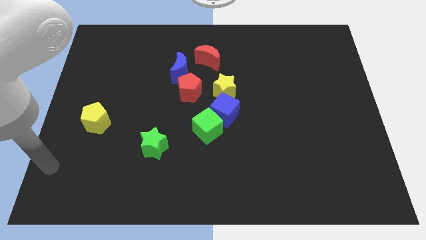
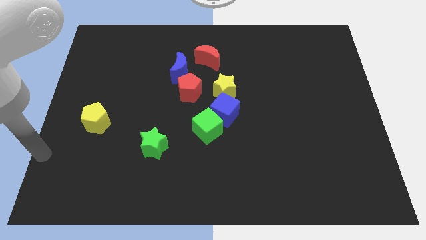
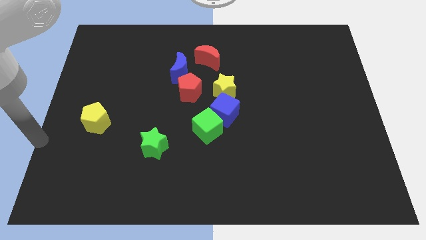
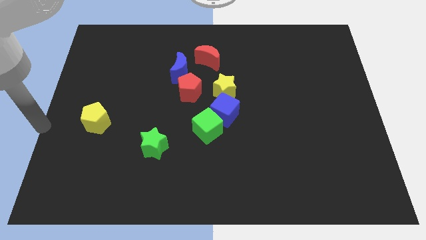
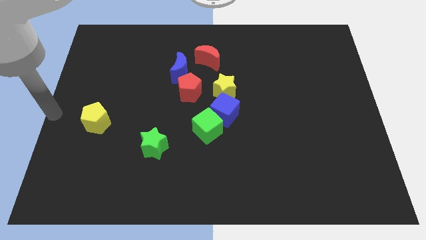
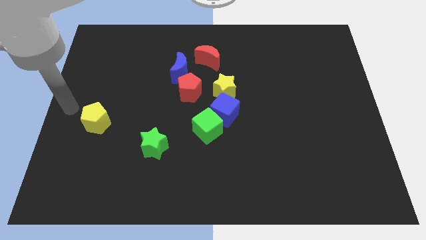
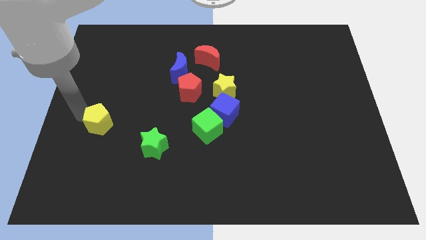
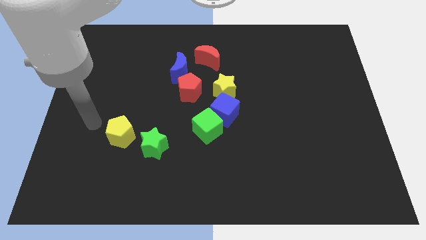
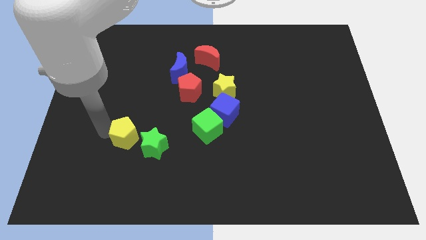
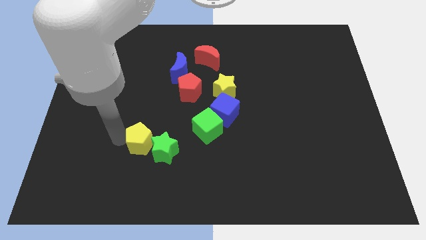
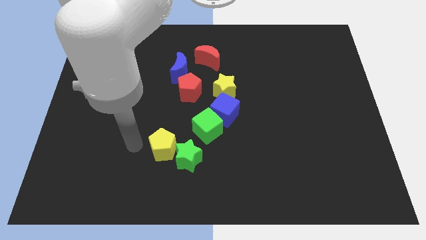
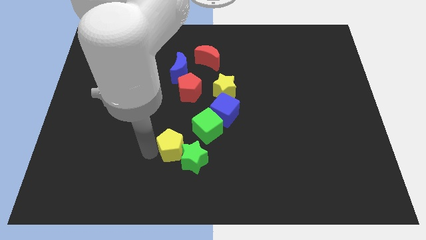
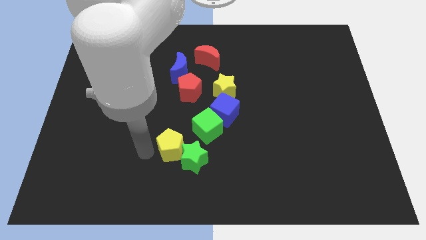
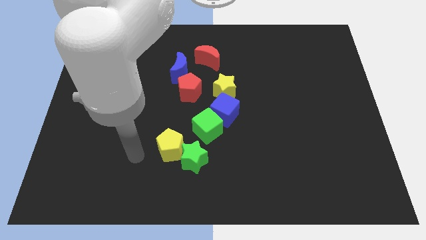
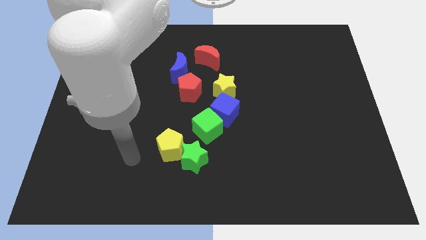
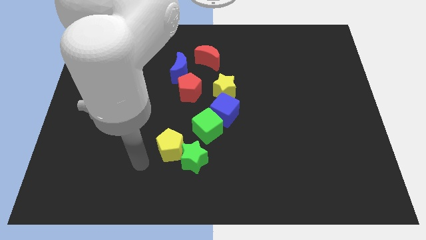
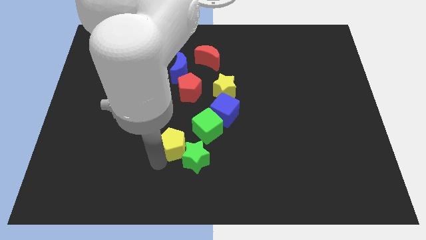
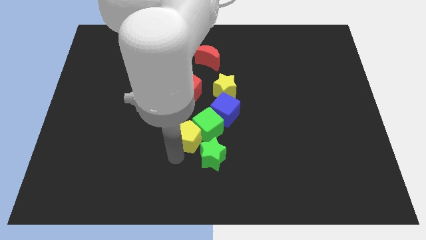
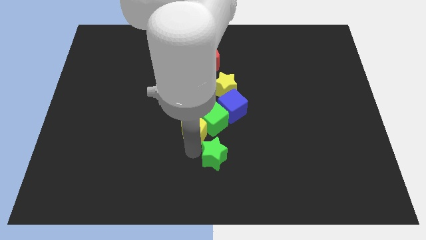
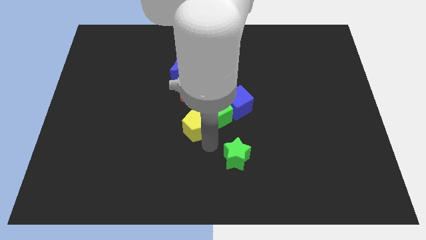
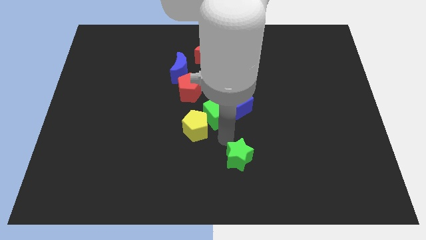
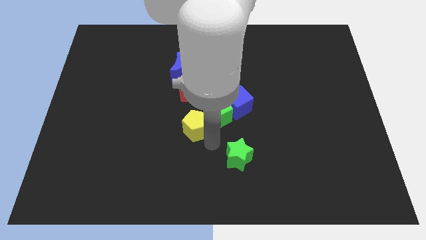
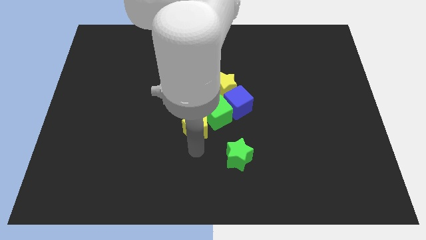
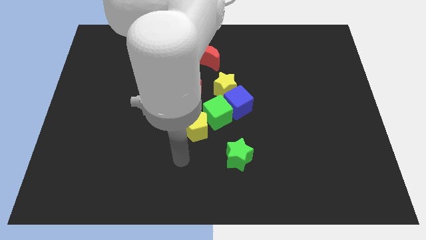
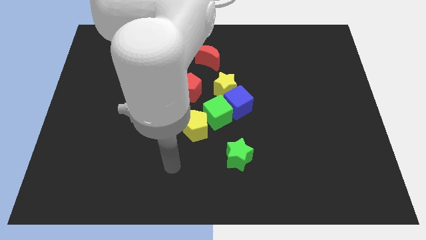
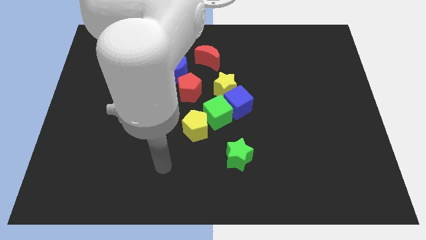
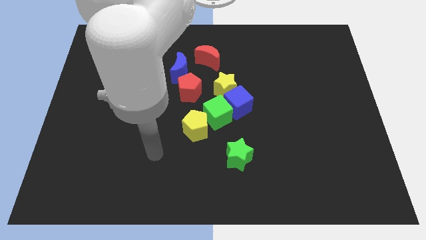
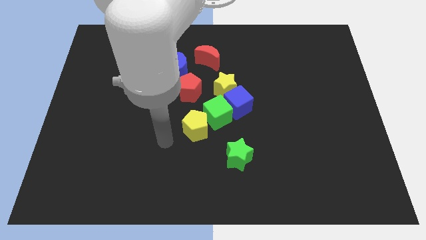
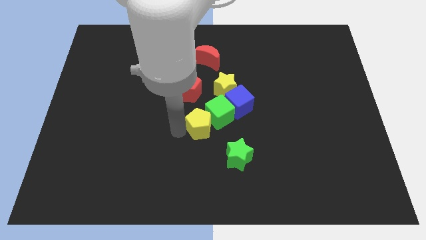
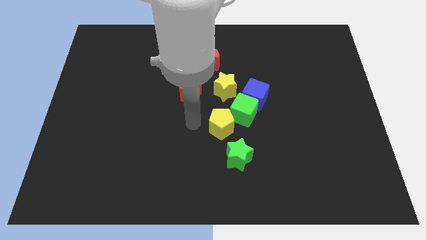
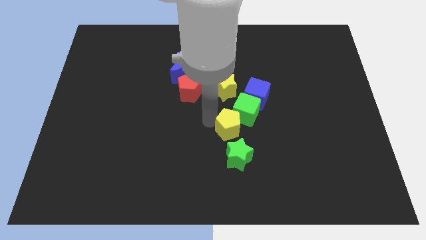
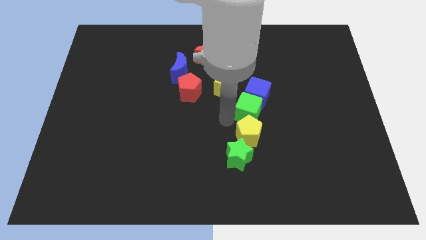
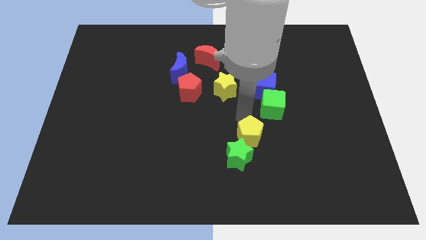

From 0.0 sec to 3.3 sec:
push the yellow pentagon into the green cube

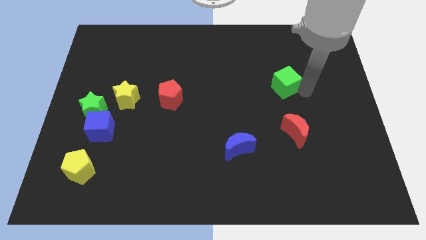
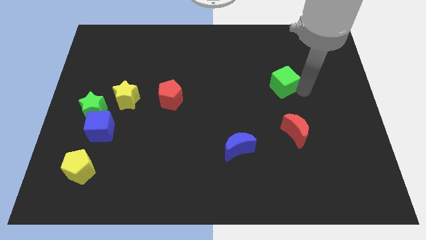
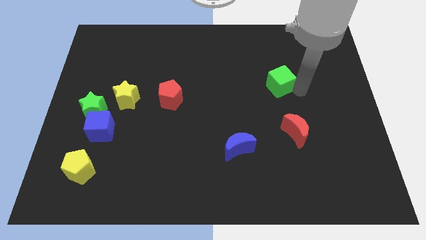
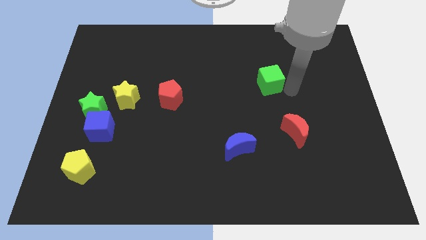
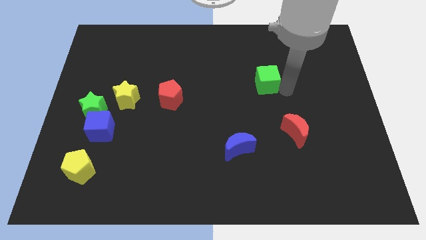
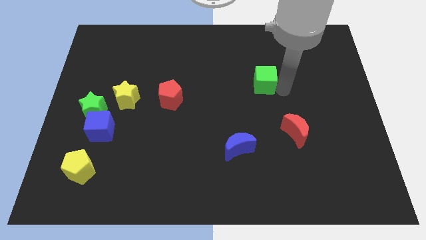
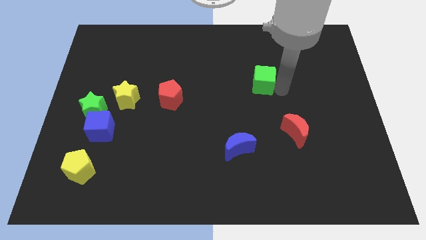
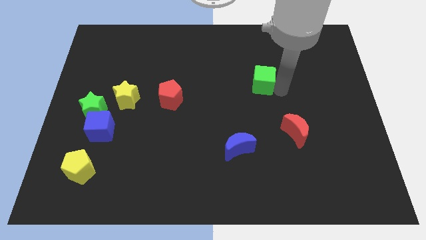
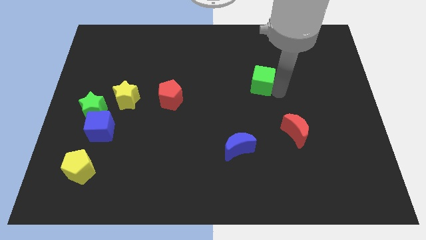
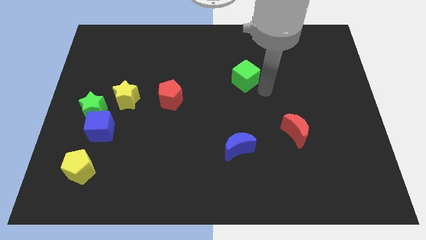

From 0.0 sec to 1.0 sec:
move the green cube to the left

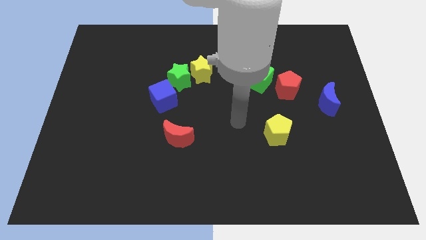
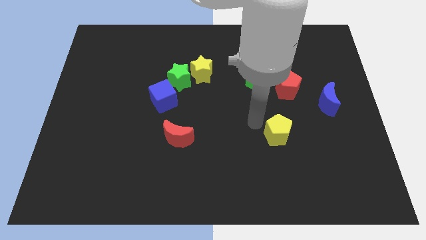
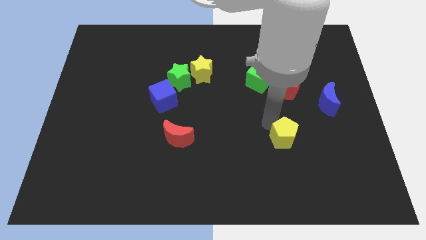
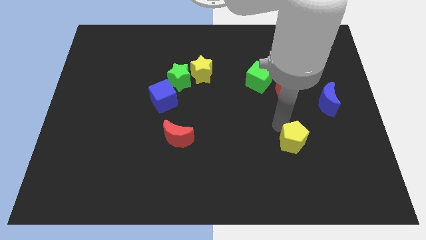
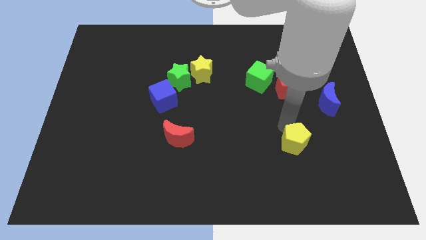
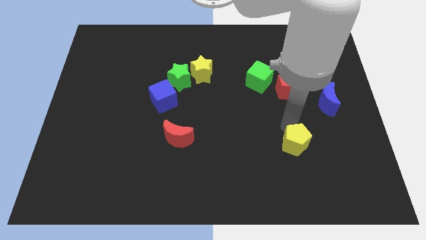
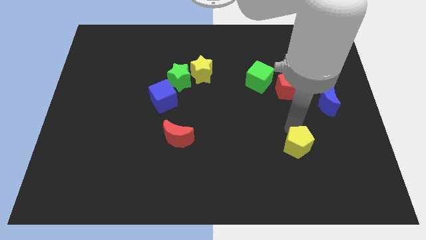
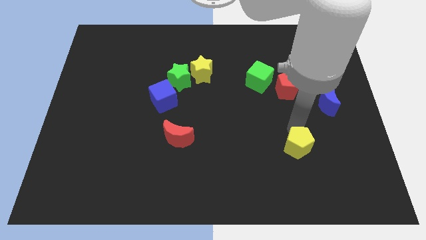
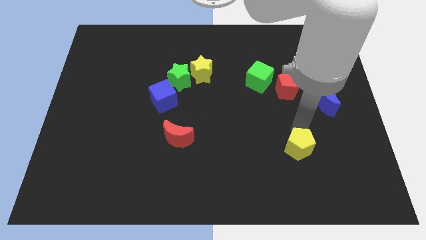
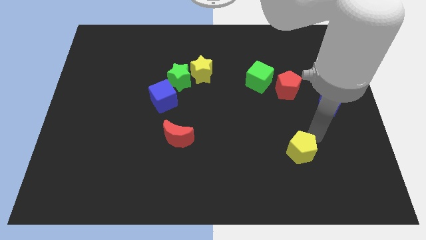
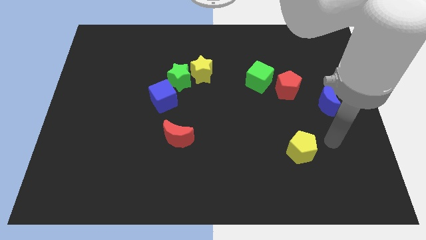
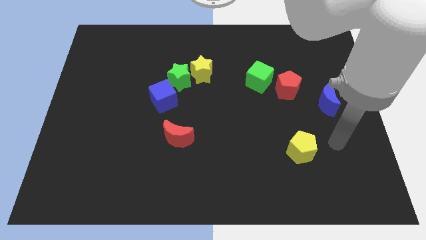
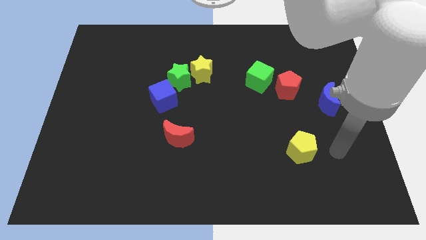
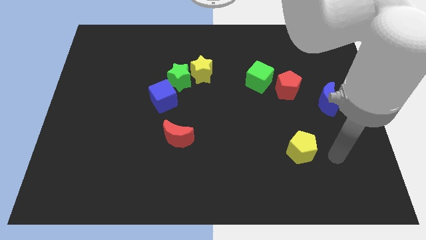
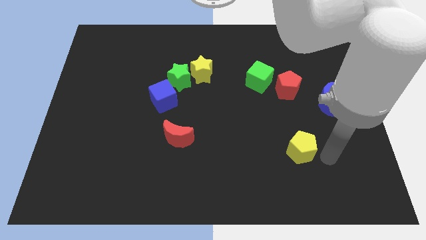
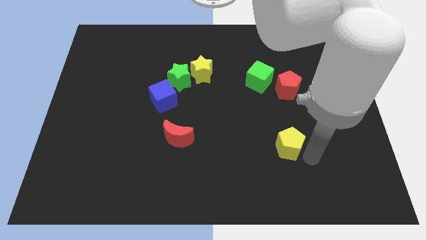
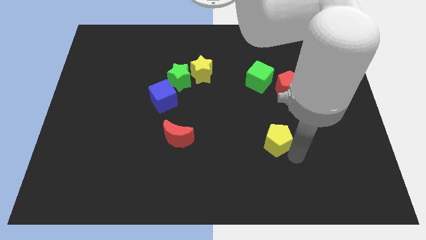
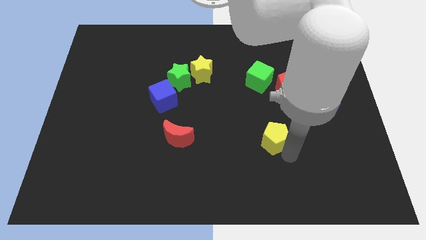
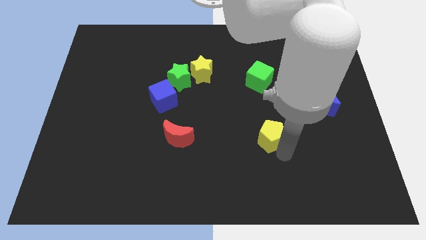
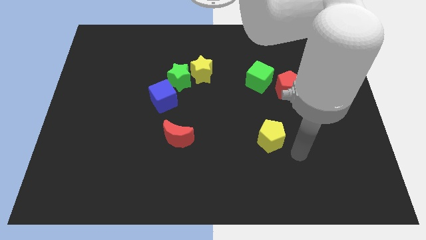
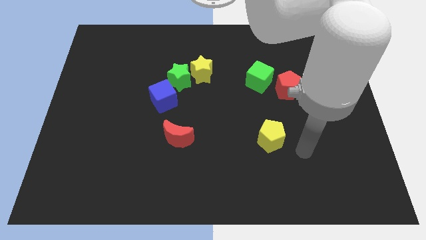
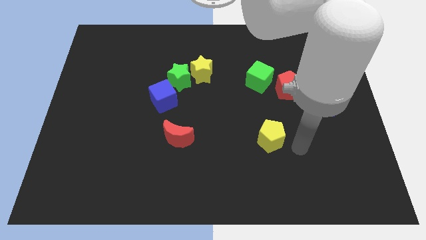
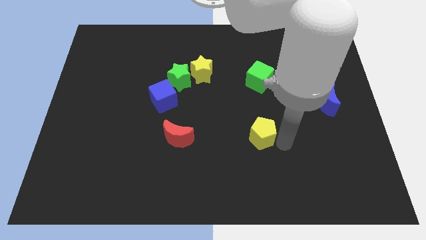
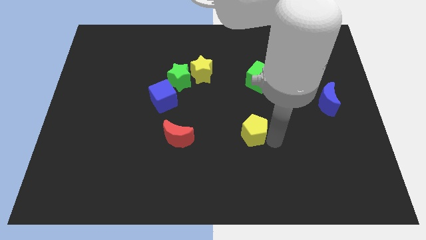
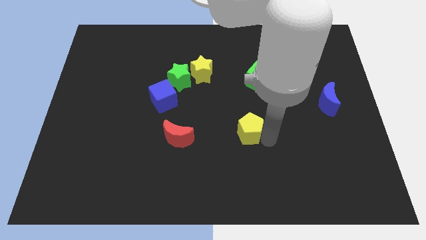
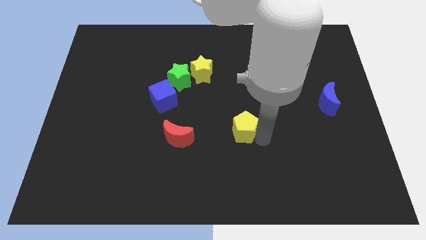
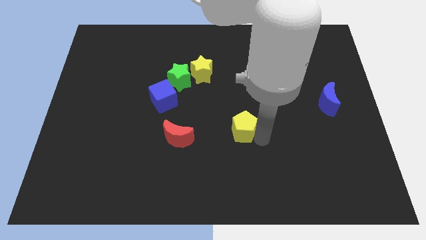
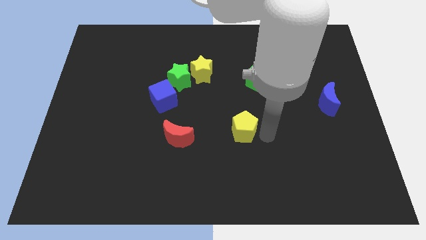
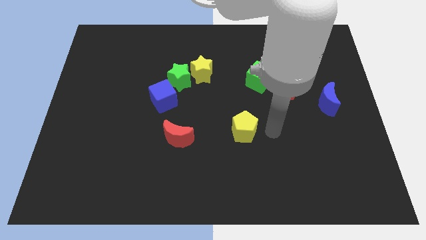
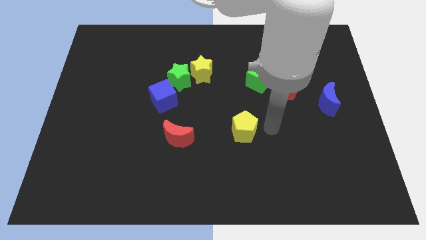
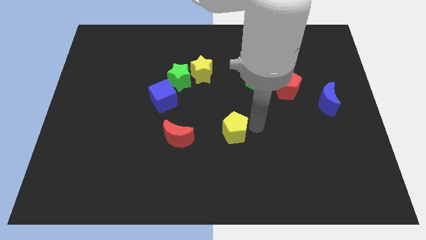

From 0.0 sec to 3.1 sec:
move the yellow pentagon to the center

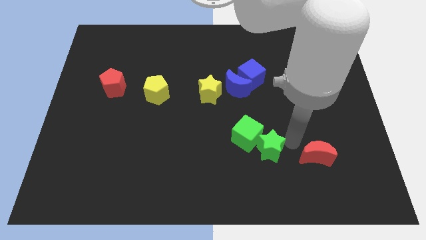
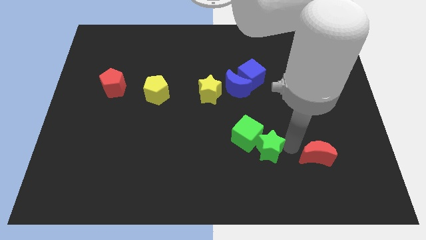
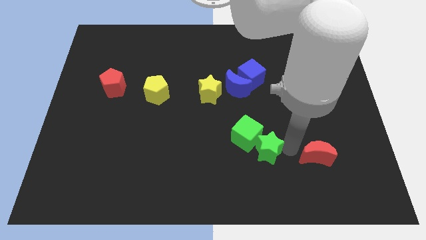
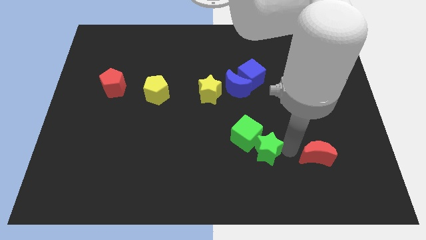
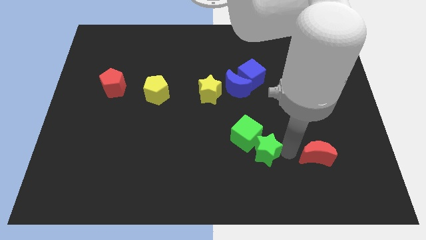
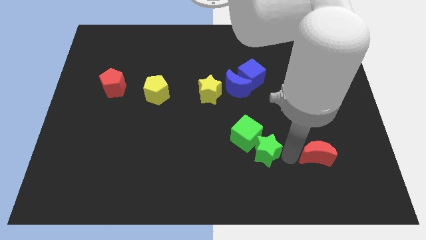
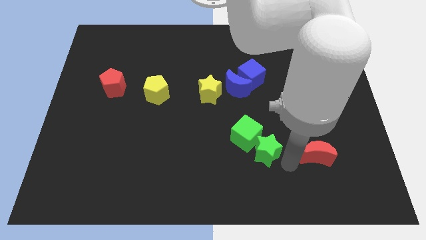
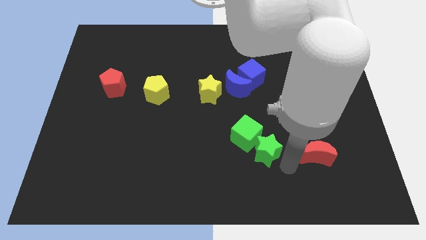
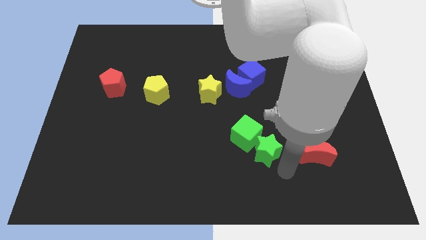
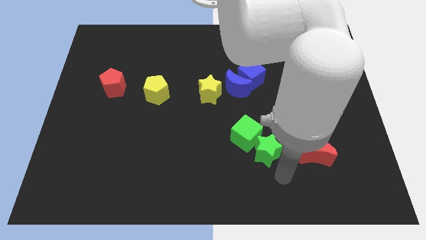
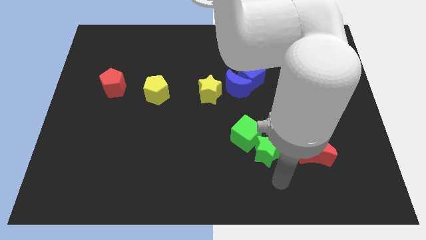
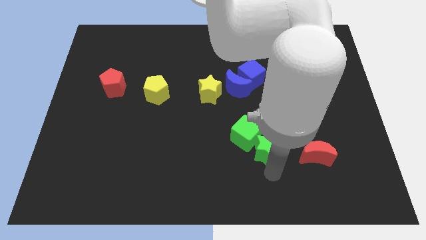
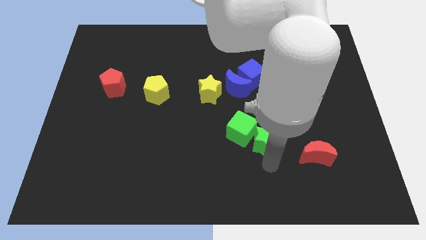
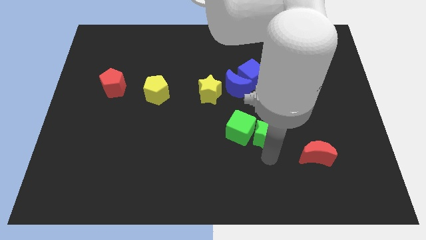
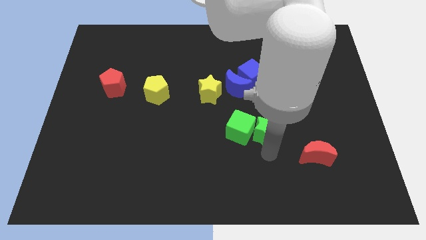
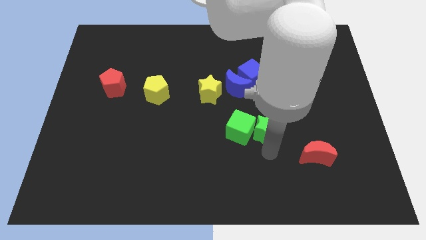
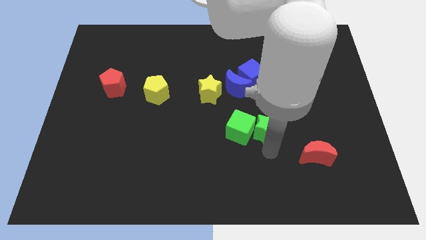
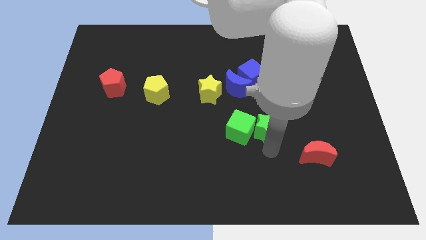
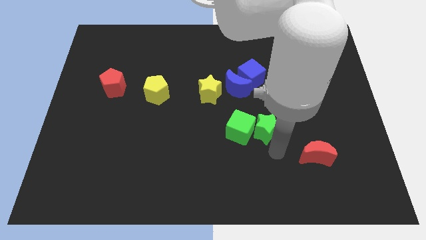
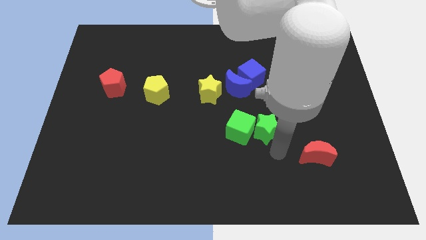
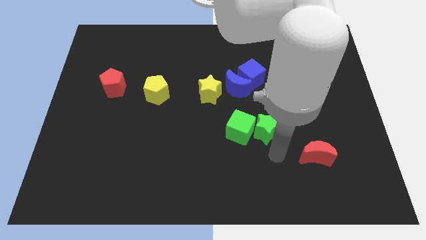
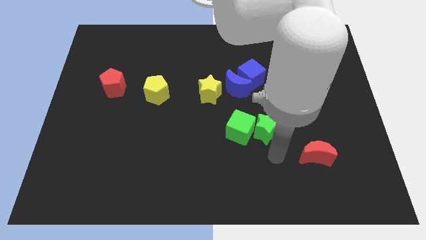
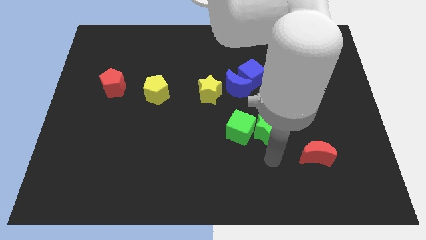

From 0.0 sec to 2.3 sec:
slightly push the star upwards
